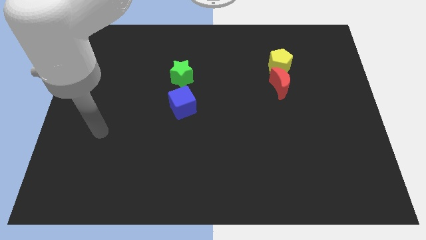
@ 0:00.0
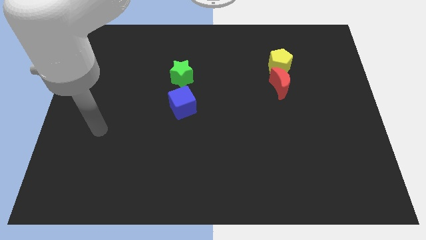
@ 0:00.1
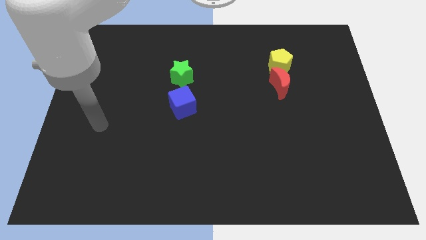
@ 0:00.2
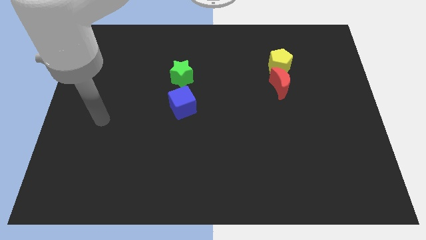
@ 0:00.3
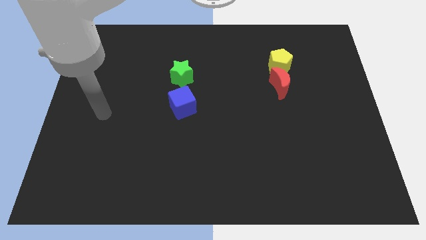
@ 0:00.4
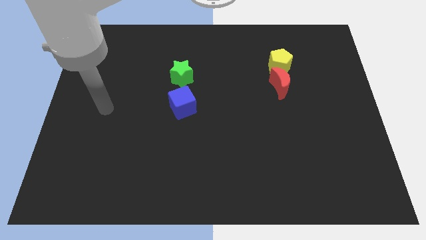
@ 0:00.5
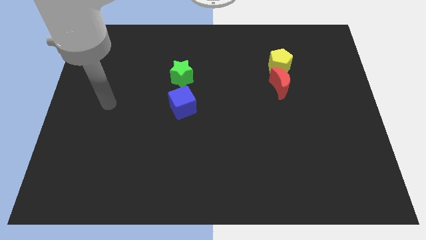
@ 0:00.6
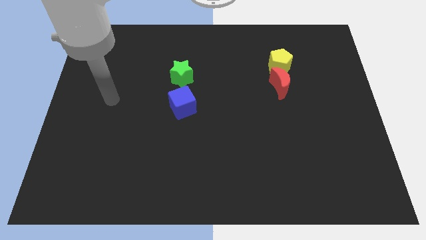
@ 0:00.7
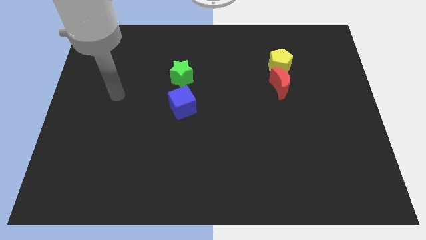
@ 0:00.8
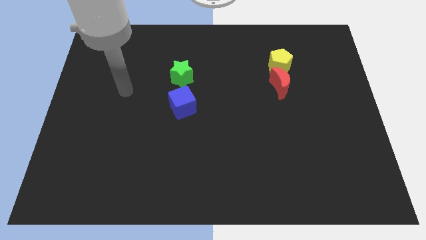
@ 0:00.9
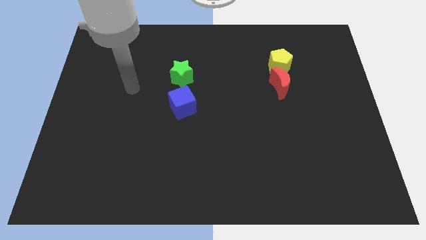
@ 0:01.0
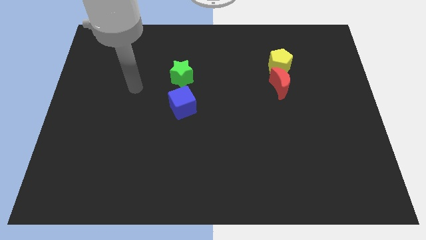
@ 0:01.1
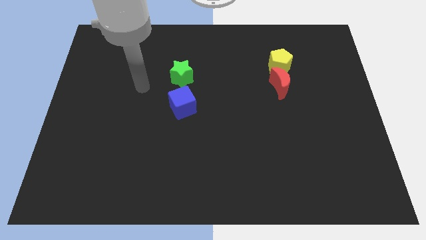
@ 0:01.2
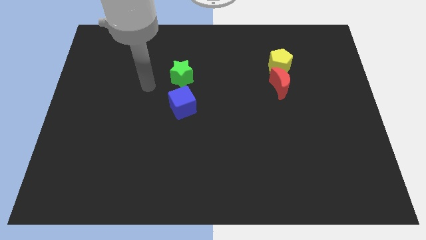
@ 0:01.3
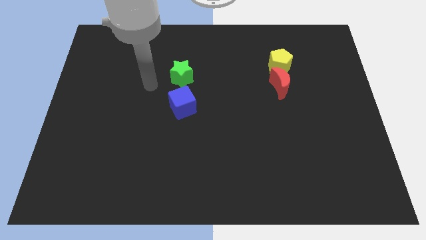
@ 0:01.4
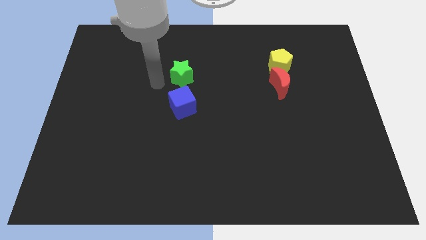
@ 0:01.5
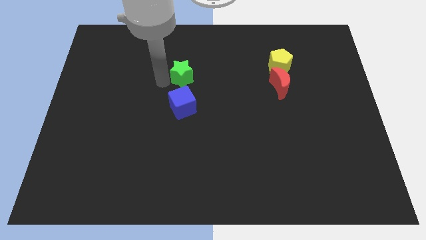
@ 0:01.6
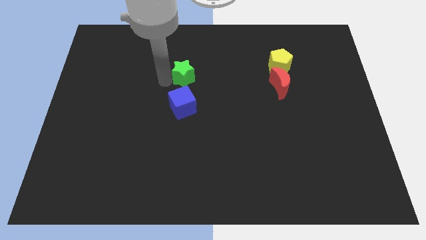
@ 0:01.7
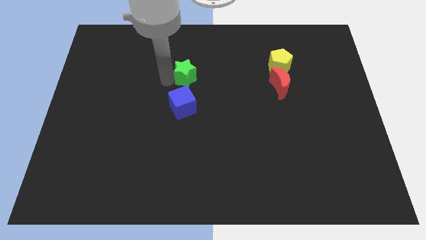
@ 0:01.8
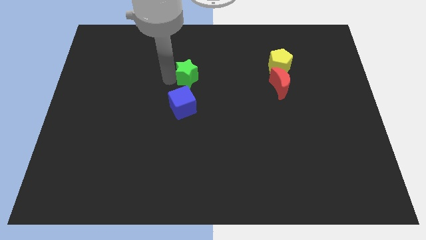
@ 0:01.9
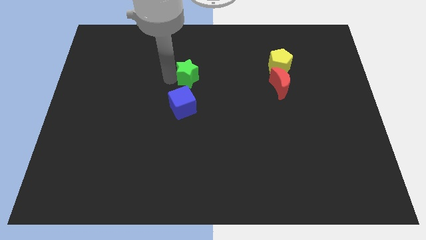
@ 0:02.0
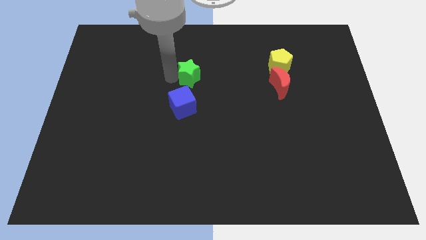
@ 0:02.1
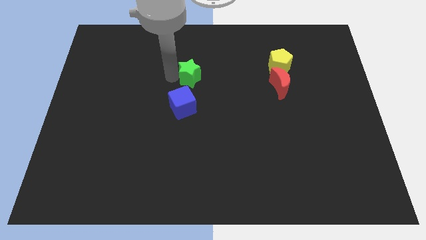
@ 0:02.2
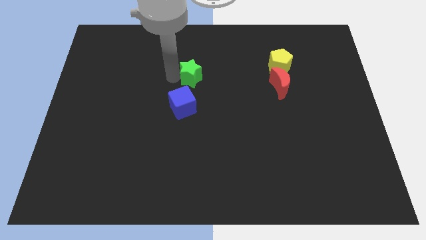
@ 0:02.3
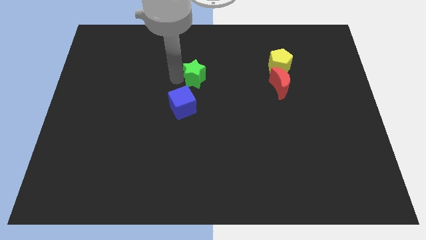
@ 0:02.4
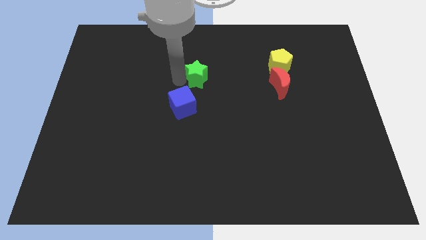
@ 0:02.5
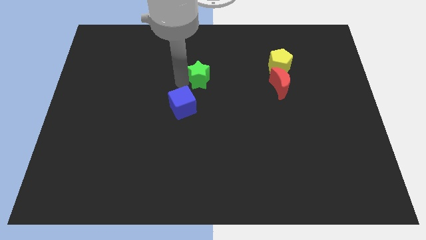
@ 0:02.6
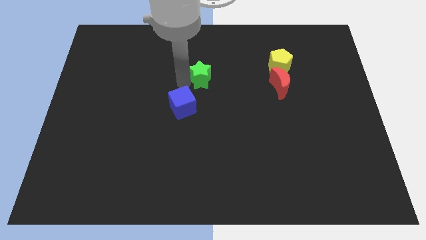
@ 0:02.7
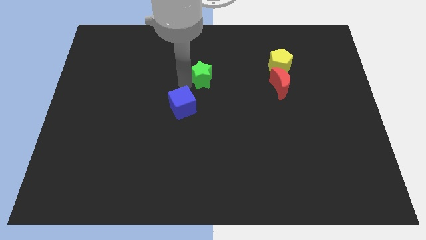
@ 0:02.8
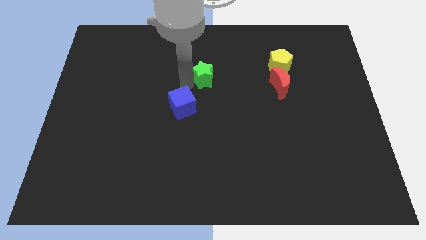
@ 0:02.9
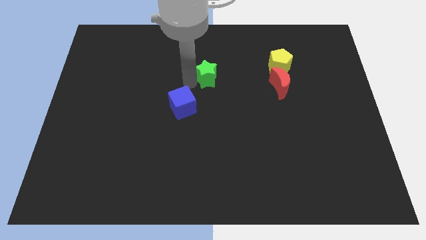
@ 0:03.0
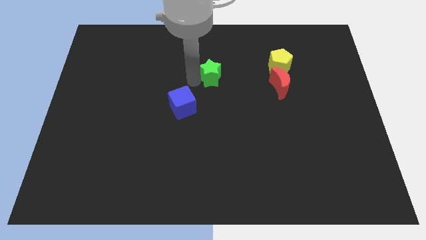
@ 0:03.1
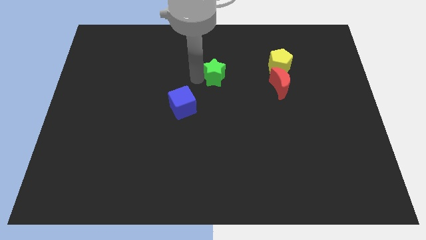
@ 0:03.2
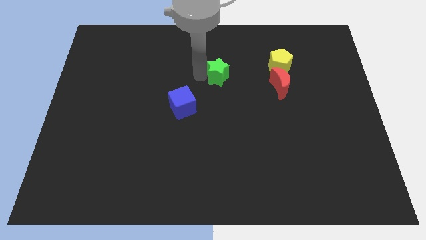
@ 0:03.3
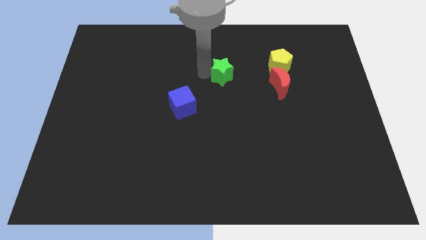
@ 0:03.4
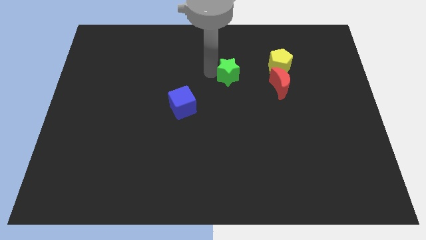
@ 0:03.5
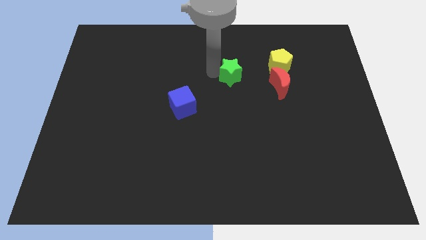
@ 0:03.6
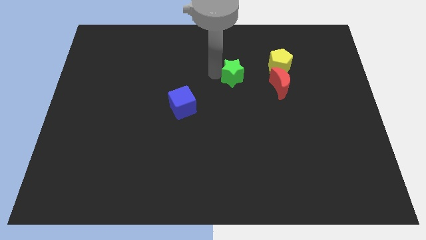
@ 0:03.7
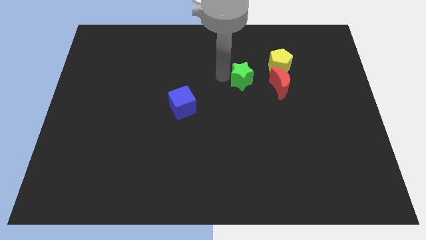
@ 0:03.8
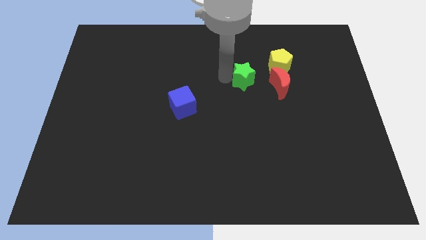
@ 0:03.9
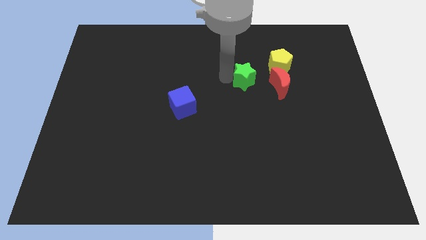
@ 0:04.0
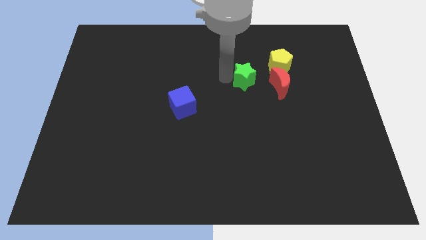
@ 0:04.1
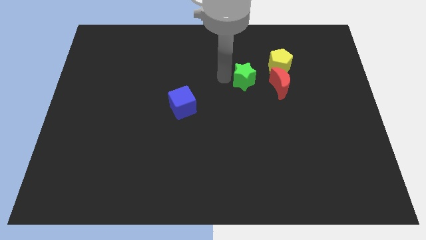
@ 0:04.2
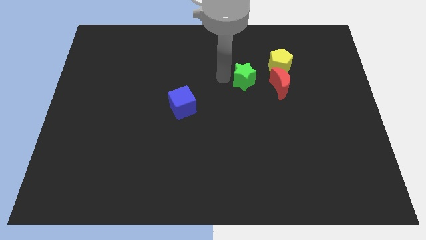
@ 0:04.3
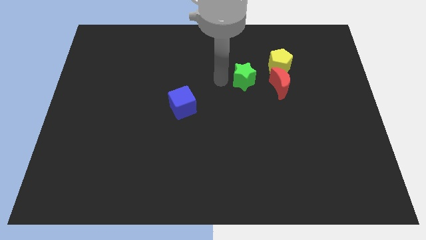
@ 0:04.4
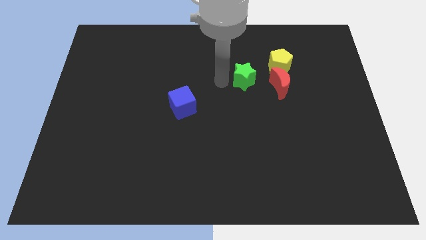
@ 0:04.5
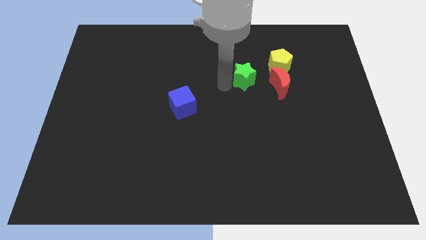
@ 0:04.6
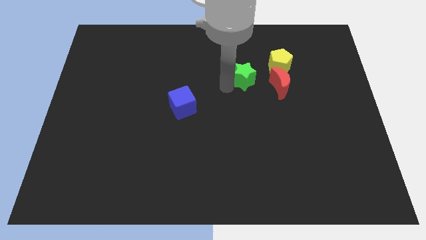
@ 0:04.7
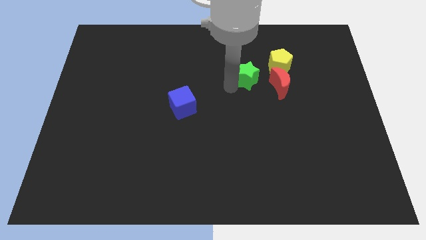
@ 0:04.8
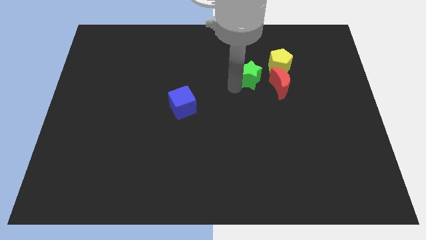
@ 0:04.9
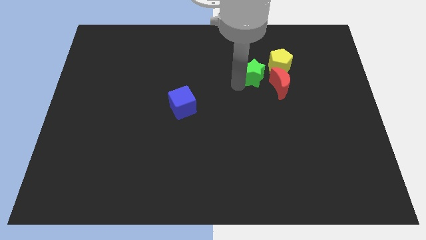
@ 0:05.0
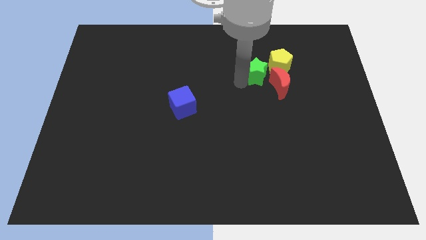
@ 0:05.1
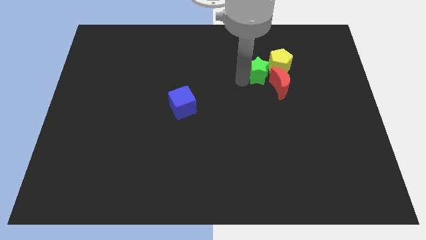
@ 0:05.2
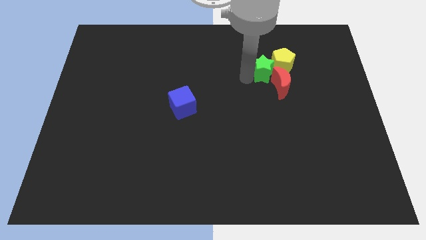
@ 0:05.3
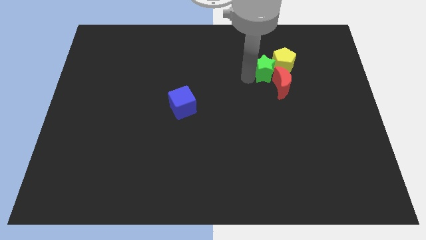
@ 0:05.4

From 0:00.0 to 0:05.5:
put the green star to the yellow block

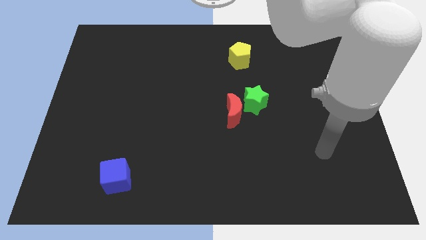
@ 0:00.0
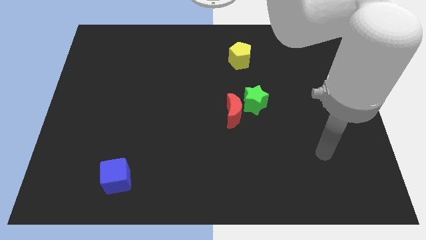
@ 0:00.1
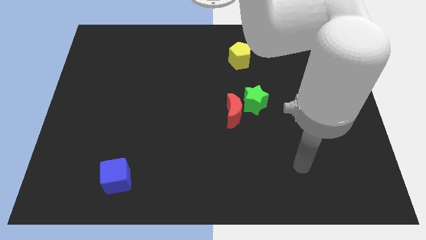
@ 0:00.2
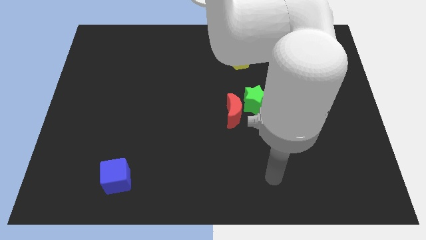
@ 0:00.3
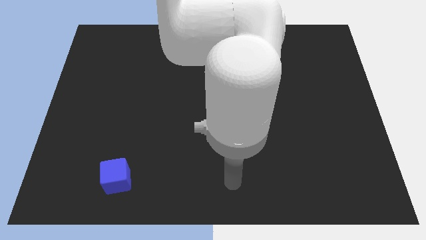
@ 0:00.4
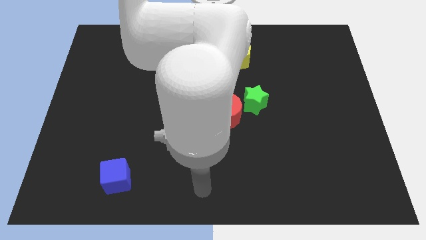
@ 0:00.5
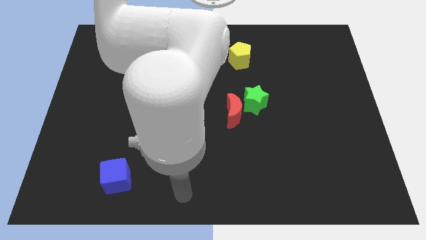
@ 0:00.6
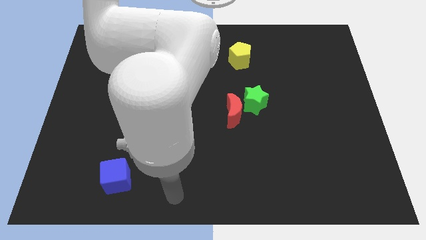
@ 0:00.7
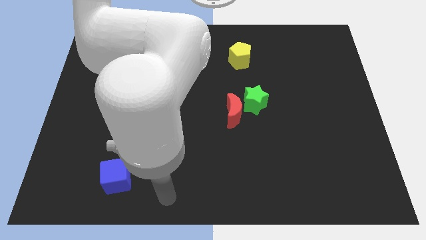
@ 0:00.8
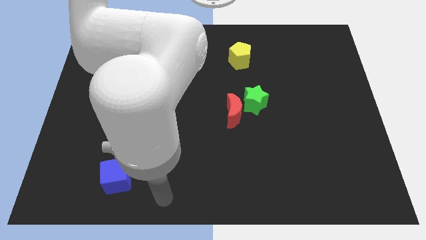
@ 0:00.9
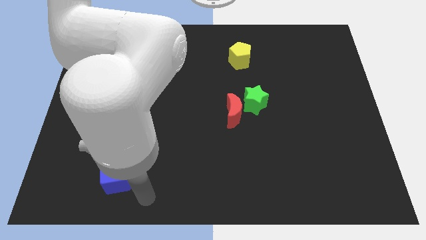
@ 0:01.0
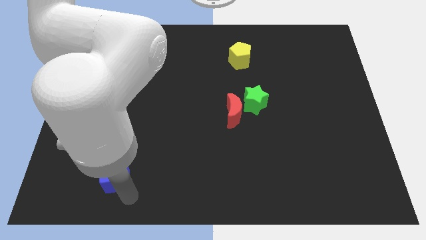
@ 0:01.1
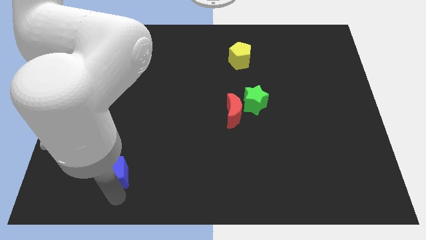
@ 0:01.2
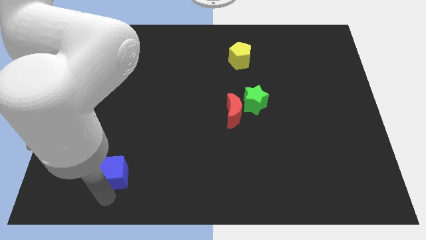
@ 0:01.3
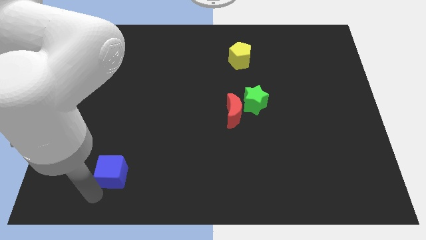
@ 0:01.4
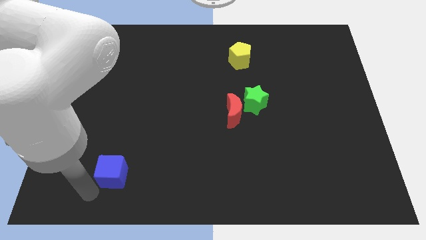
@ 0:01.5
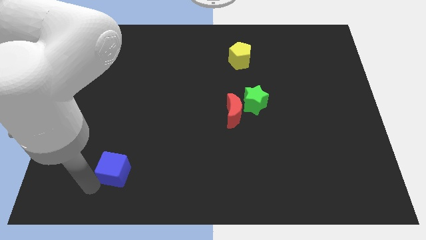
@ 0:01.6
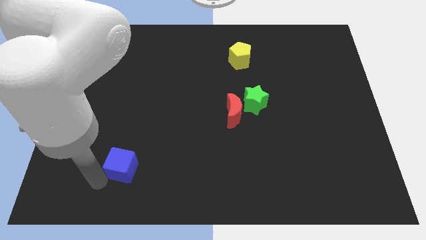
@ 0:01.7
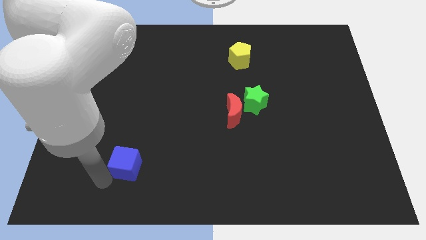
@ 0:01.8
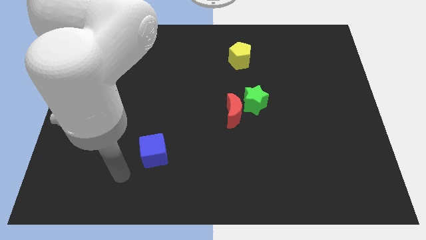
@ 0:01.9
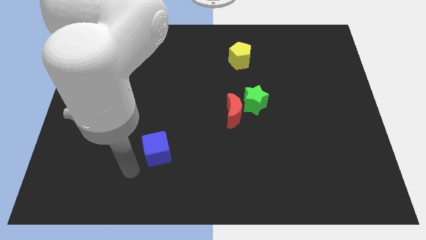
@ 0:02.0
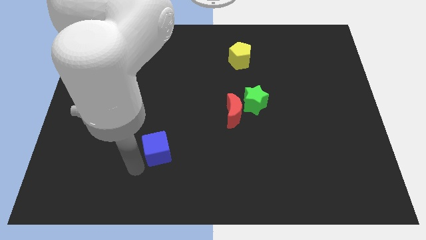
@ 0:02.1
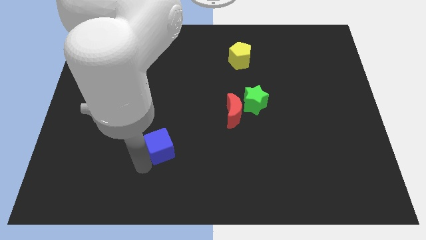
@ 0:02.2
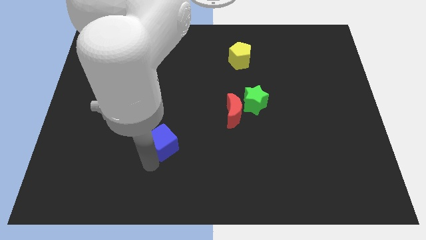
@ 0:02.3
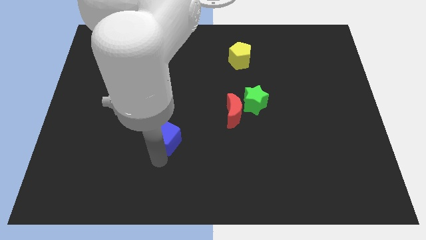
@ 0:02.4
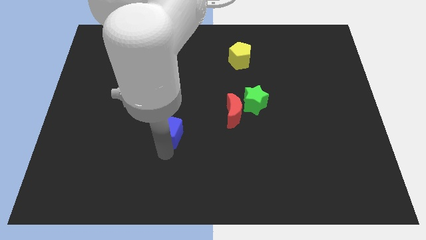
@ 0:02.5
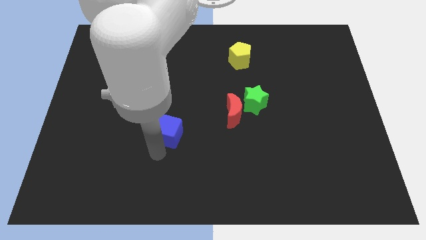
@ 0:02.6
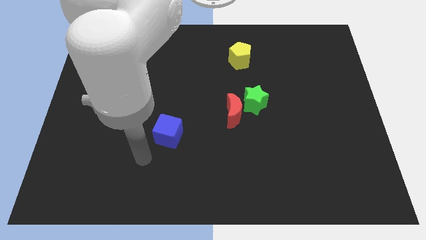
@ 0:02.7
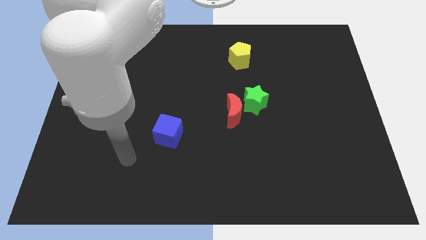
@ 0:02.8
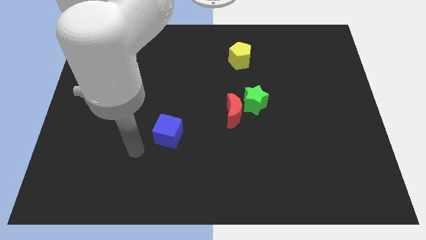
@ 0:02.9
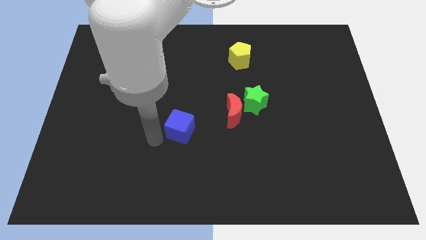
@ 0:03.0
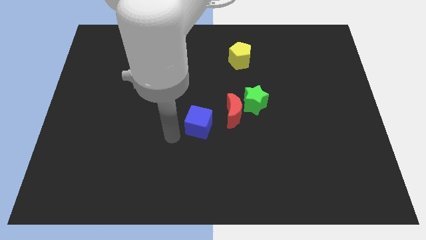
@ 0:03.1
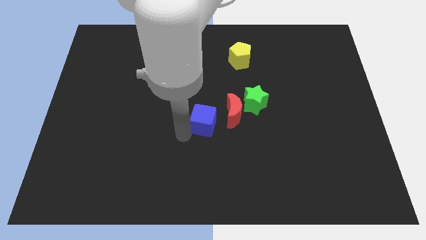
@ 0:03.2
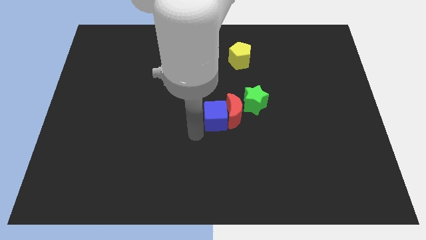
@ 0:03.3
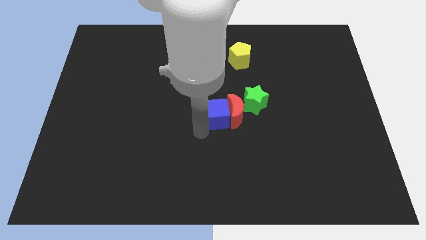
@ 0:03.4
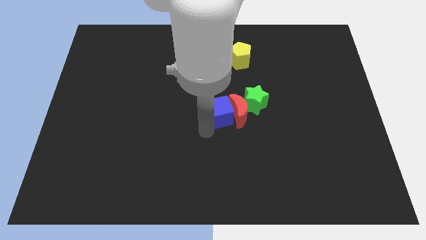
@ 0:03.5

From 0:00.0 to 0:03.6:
push the cube towards the red moon
